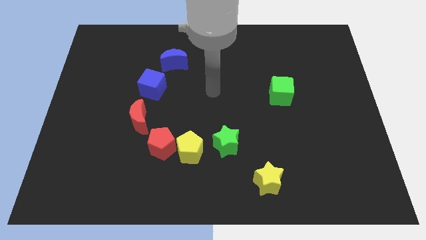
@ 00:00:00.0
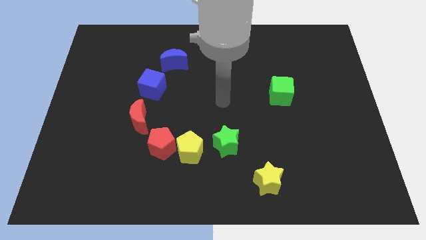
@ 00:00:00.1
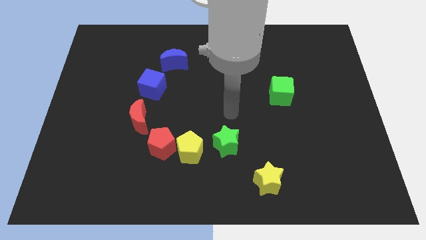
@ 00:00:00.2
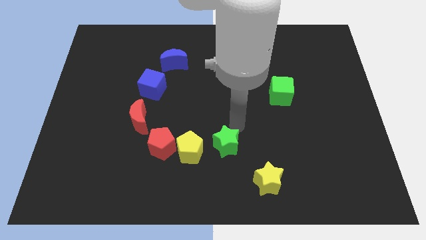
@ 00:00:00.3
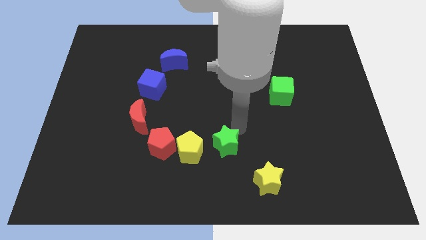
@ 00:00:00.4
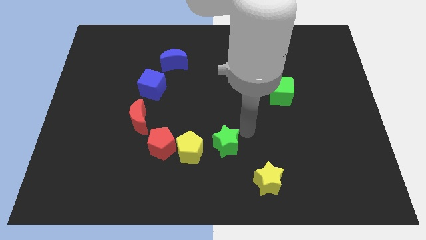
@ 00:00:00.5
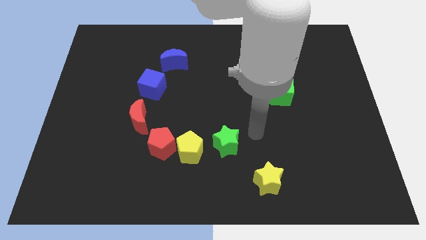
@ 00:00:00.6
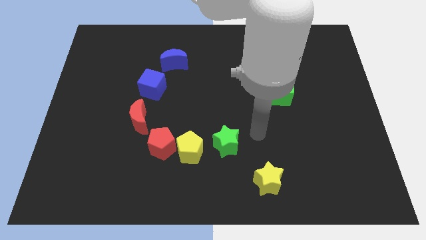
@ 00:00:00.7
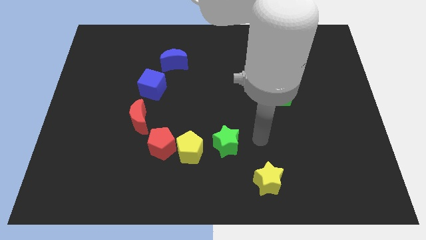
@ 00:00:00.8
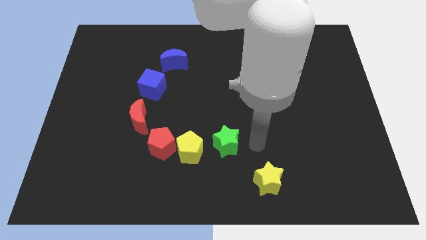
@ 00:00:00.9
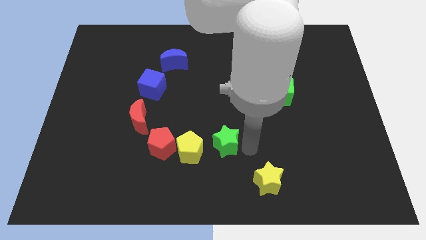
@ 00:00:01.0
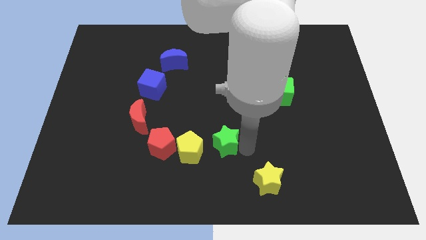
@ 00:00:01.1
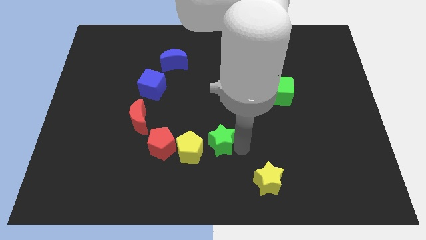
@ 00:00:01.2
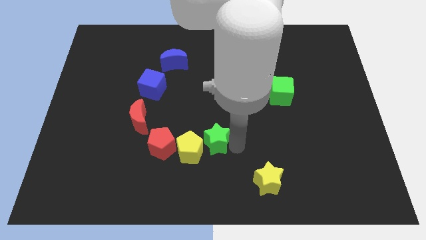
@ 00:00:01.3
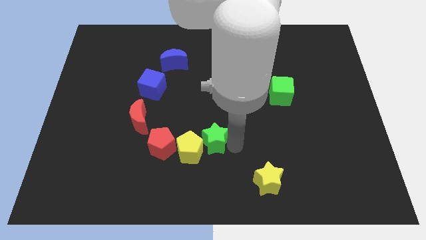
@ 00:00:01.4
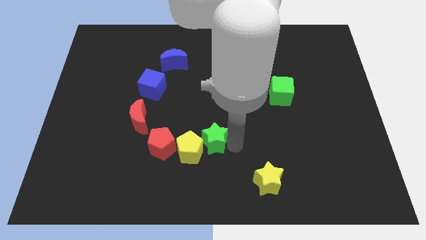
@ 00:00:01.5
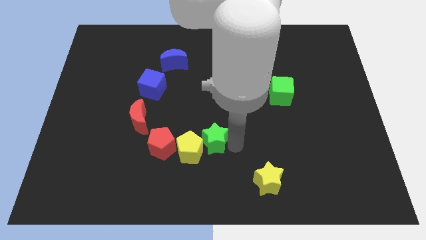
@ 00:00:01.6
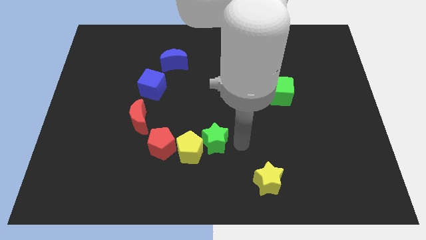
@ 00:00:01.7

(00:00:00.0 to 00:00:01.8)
move the green star into the yellow pentagon

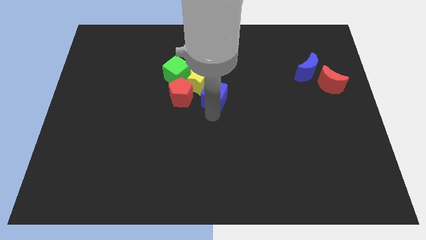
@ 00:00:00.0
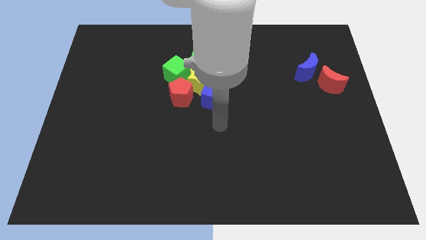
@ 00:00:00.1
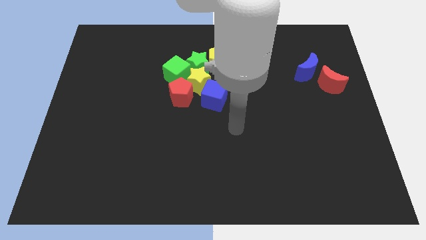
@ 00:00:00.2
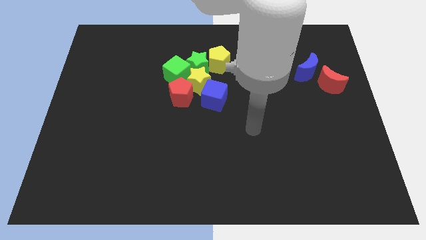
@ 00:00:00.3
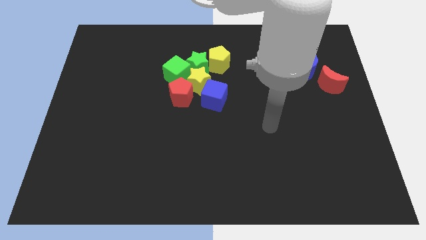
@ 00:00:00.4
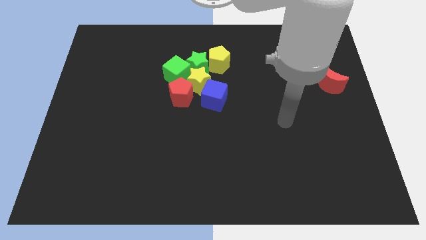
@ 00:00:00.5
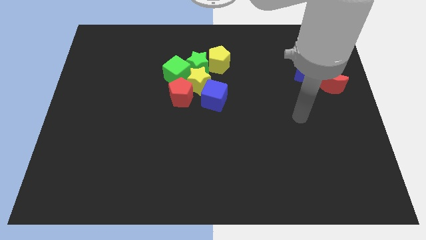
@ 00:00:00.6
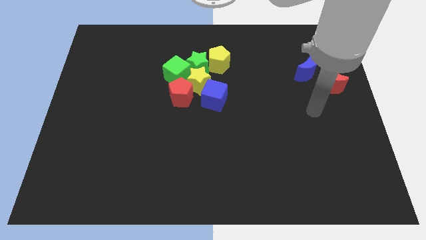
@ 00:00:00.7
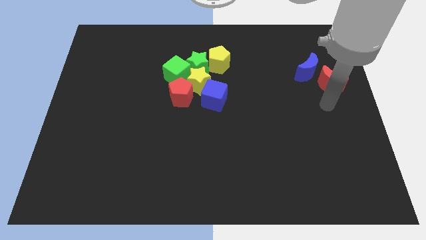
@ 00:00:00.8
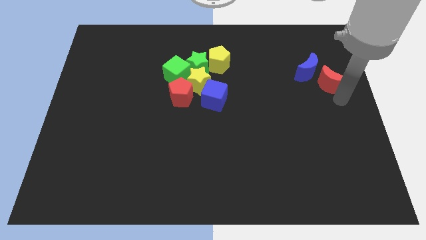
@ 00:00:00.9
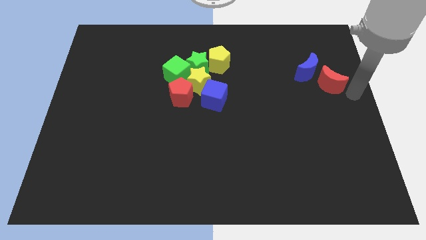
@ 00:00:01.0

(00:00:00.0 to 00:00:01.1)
point your arm bottom right to the red moon

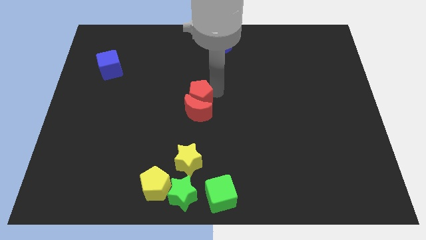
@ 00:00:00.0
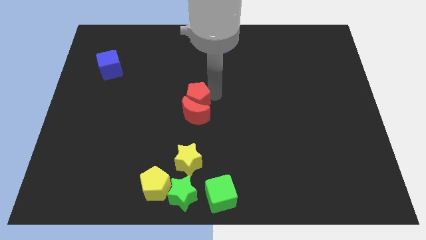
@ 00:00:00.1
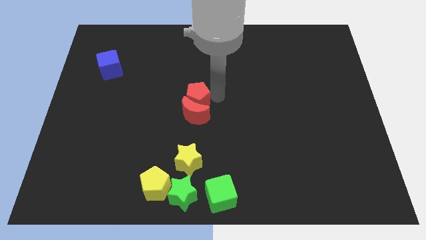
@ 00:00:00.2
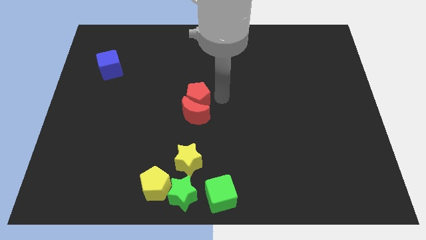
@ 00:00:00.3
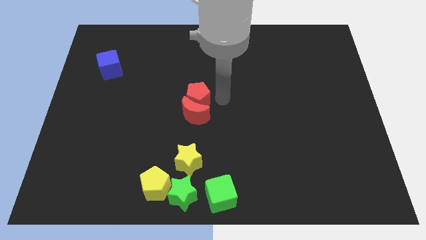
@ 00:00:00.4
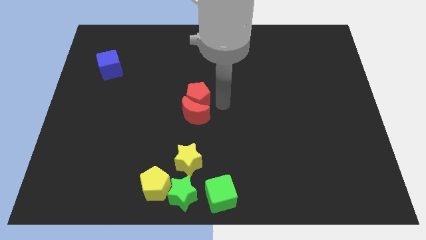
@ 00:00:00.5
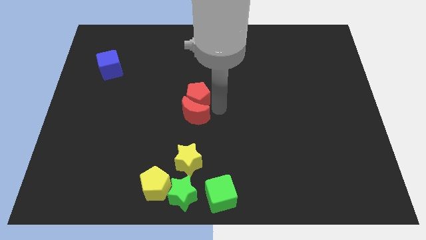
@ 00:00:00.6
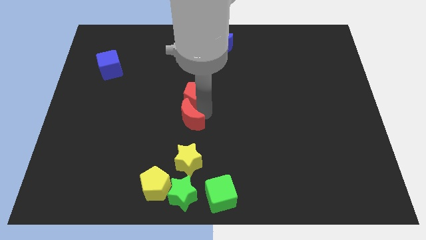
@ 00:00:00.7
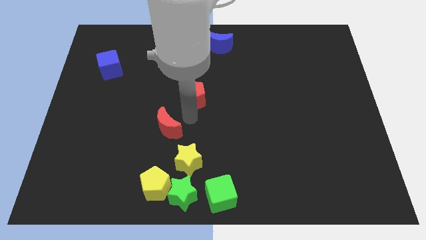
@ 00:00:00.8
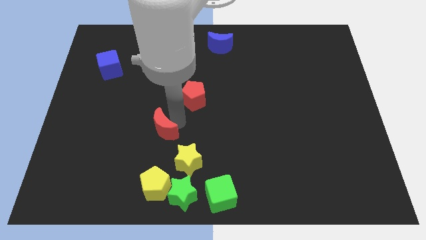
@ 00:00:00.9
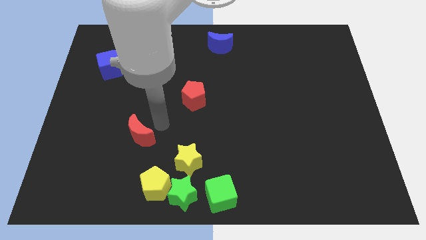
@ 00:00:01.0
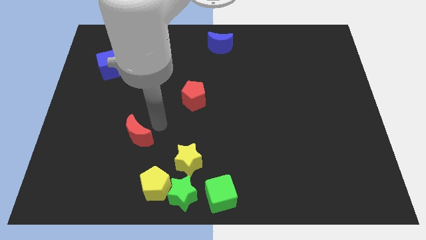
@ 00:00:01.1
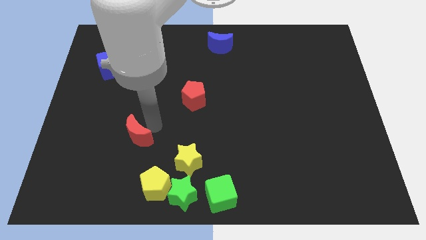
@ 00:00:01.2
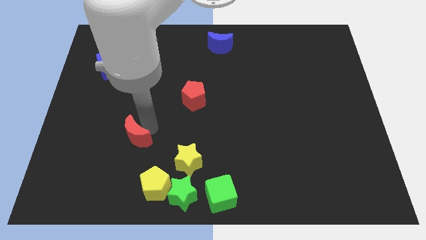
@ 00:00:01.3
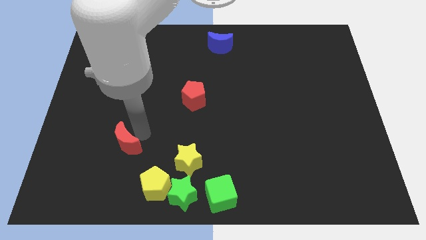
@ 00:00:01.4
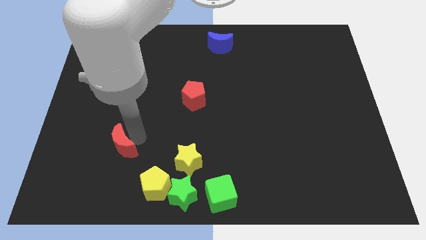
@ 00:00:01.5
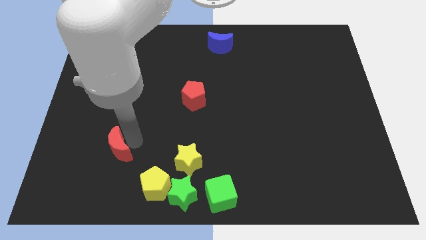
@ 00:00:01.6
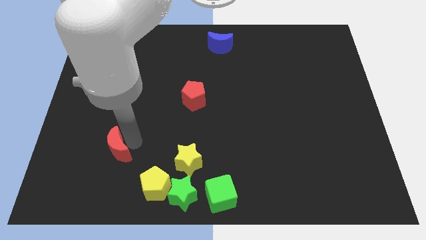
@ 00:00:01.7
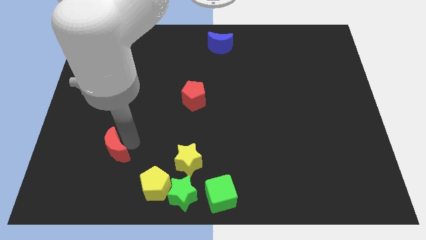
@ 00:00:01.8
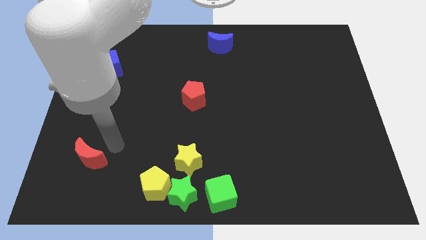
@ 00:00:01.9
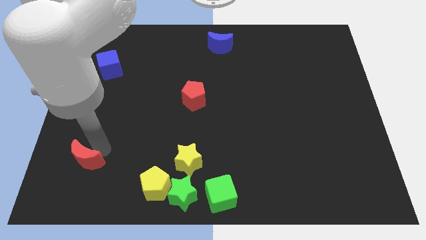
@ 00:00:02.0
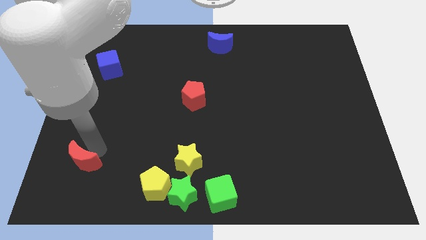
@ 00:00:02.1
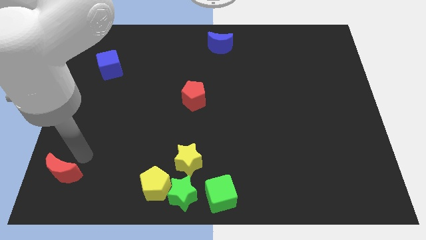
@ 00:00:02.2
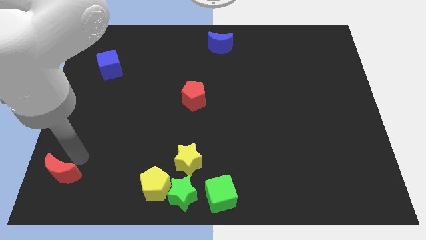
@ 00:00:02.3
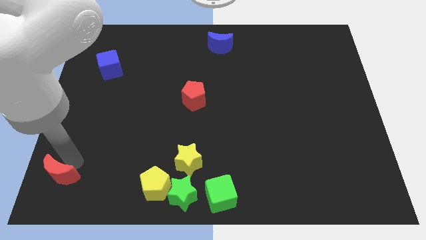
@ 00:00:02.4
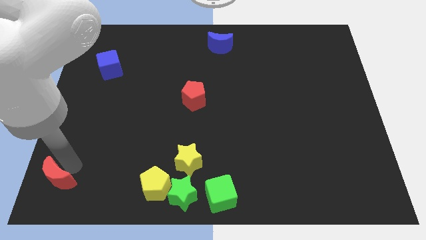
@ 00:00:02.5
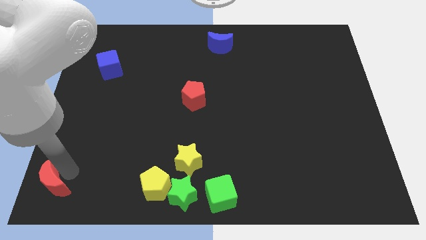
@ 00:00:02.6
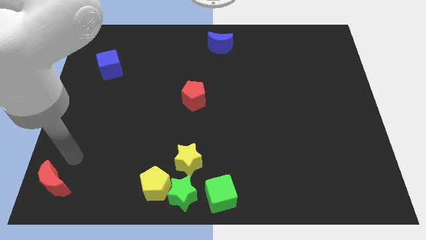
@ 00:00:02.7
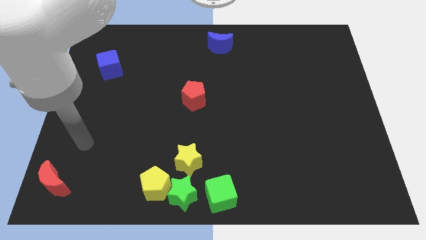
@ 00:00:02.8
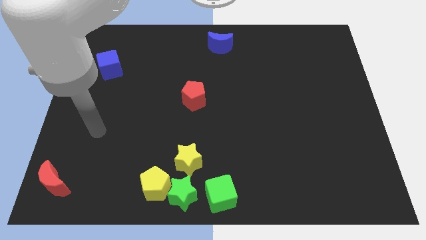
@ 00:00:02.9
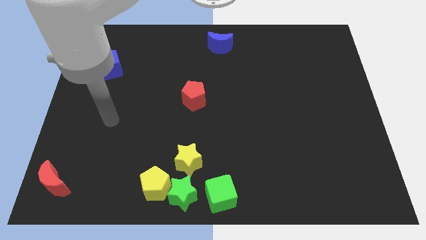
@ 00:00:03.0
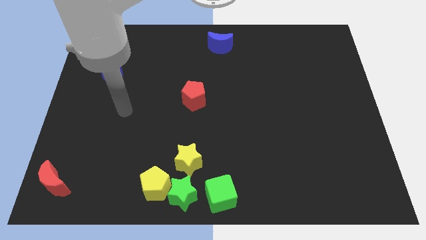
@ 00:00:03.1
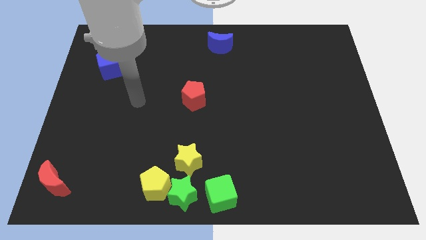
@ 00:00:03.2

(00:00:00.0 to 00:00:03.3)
separate the red moon from the bottom side of the red pentagon

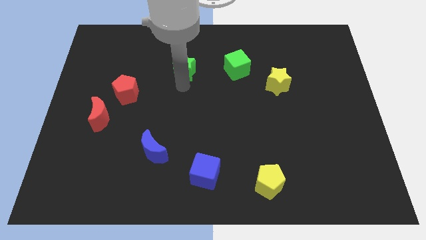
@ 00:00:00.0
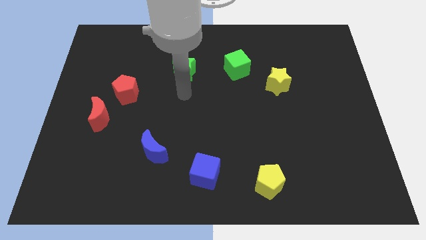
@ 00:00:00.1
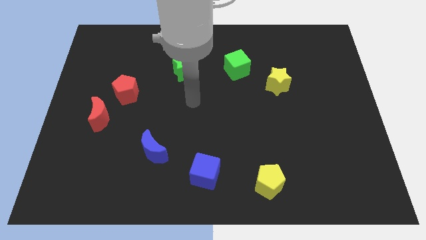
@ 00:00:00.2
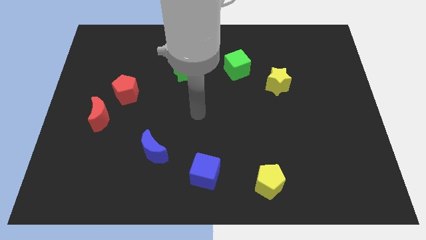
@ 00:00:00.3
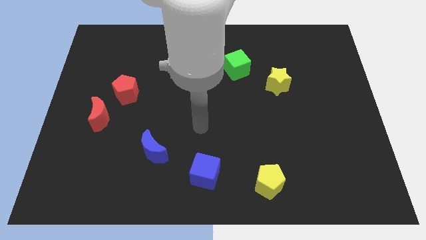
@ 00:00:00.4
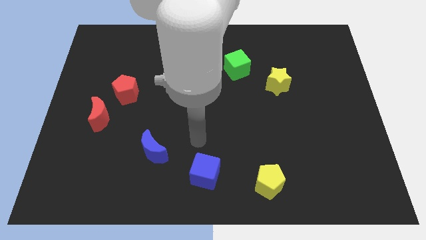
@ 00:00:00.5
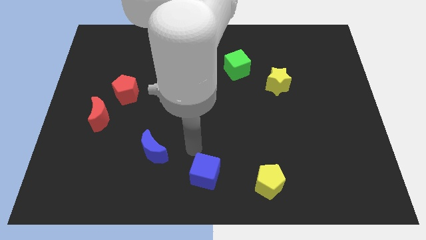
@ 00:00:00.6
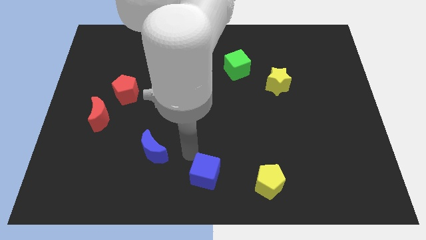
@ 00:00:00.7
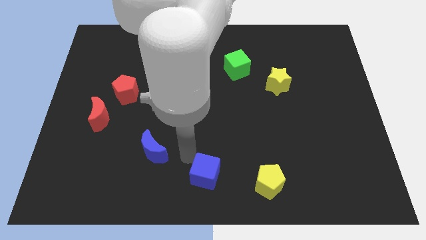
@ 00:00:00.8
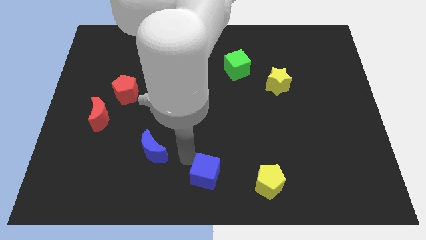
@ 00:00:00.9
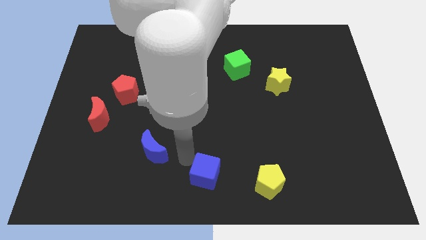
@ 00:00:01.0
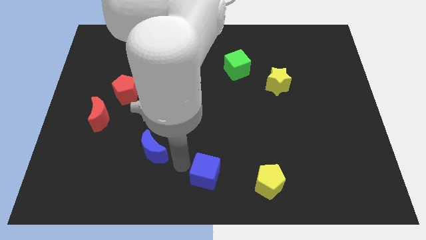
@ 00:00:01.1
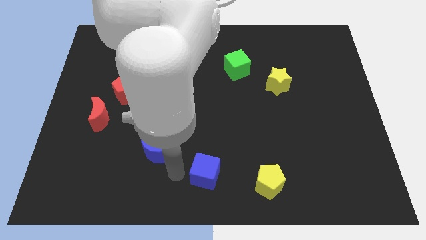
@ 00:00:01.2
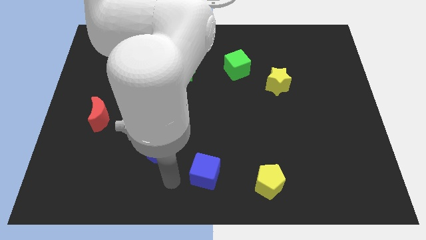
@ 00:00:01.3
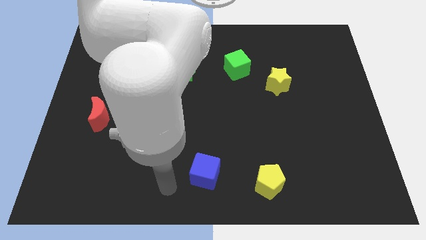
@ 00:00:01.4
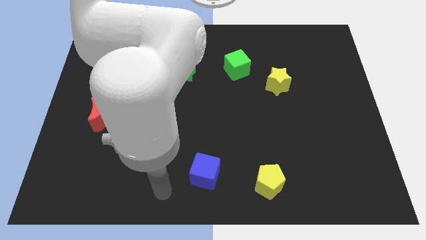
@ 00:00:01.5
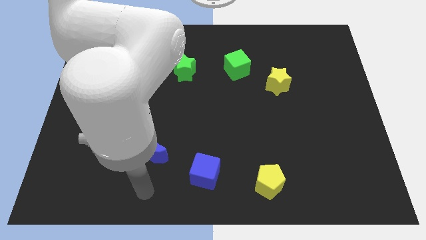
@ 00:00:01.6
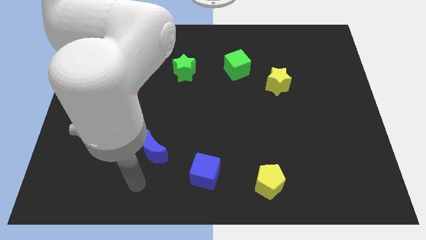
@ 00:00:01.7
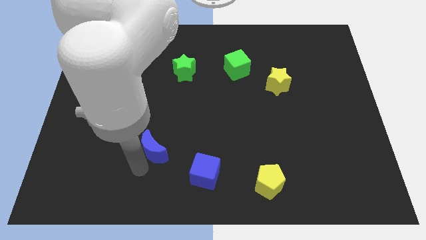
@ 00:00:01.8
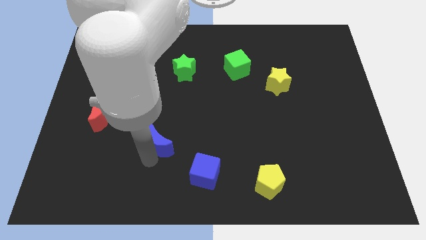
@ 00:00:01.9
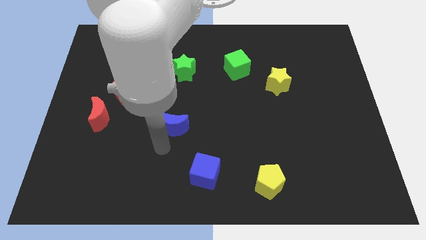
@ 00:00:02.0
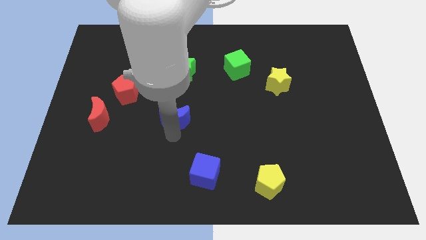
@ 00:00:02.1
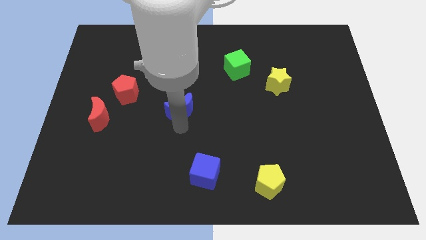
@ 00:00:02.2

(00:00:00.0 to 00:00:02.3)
push the blue crescent to the bottom of the green star

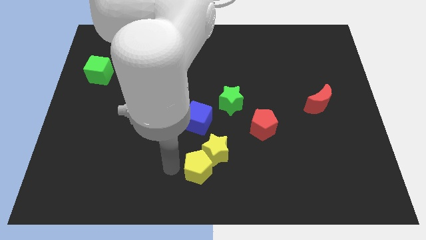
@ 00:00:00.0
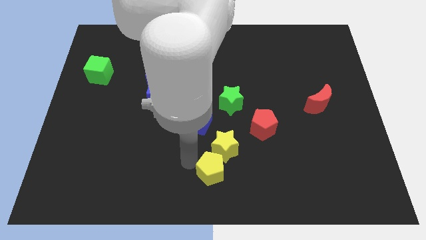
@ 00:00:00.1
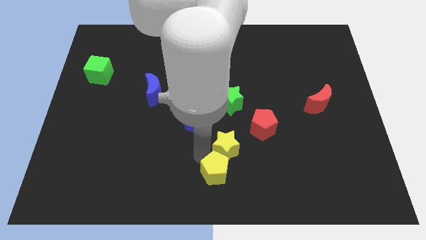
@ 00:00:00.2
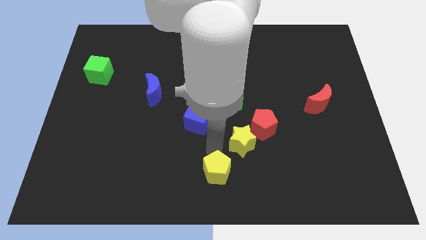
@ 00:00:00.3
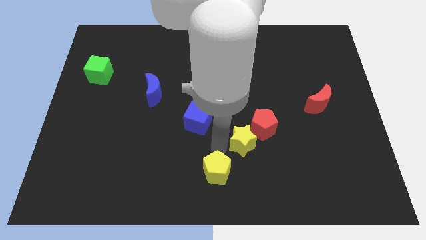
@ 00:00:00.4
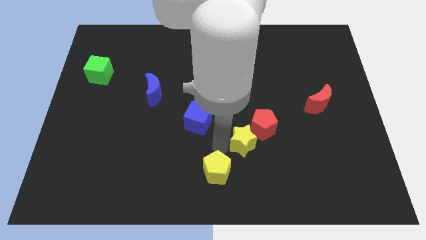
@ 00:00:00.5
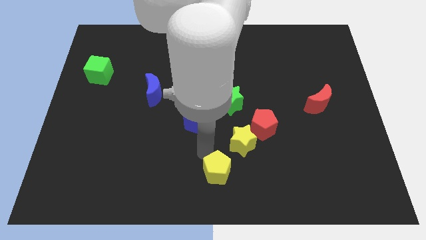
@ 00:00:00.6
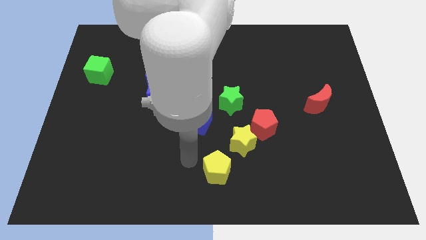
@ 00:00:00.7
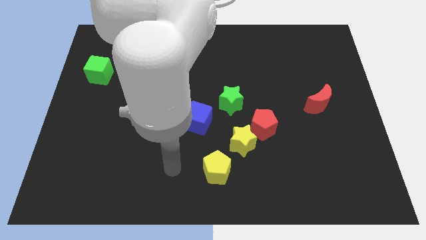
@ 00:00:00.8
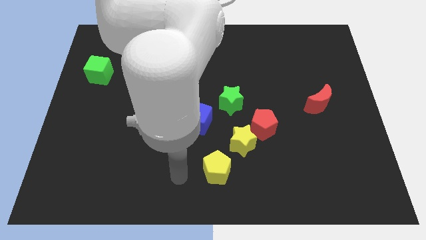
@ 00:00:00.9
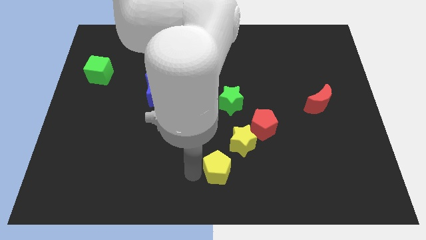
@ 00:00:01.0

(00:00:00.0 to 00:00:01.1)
slide the yellow star slightly towards the red pentagon
